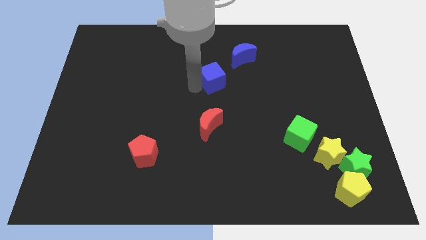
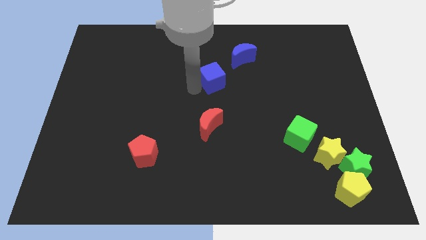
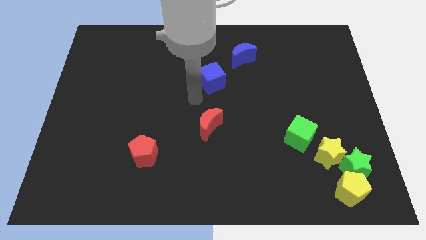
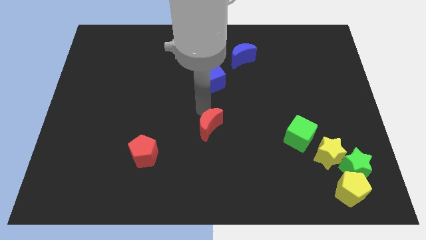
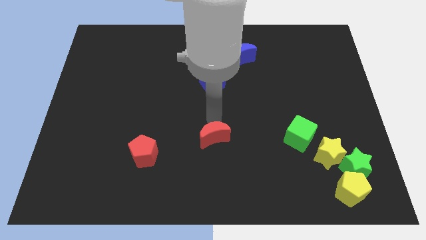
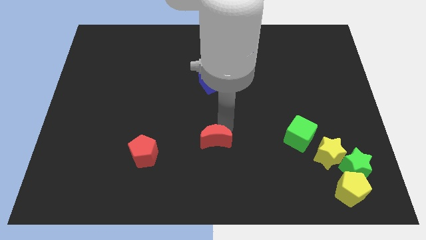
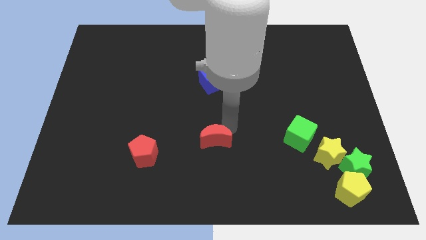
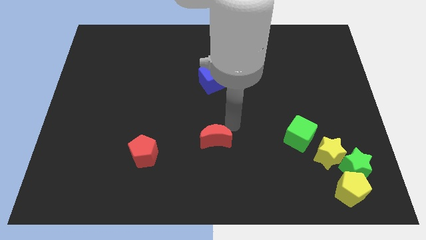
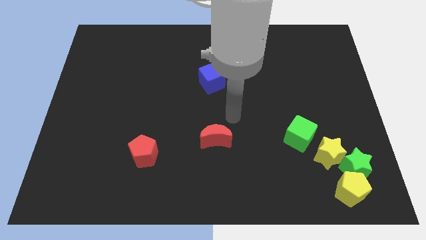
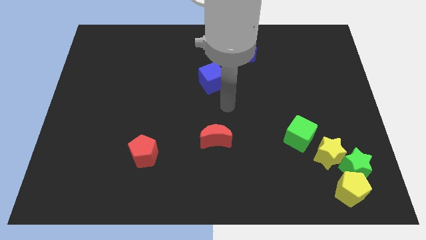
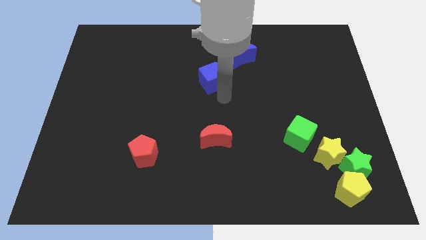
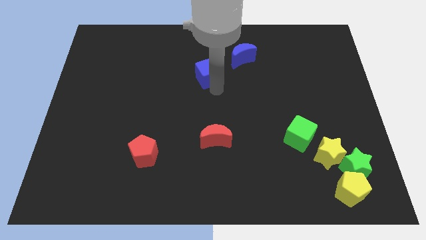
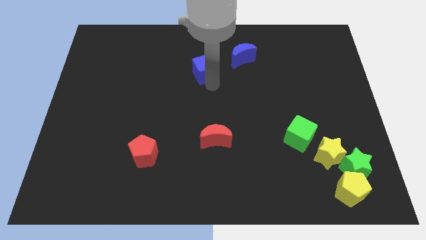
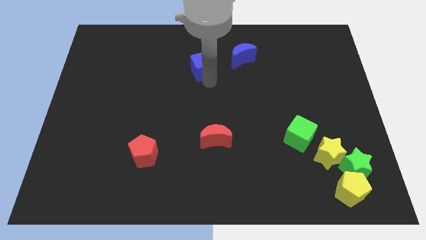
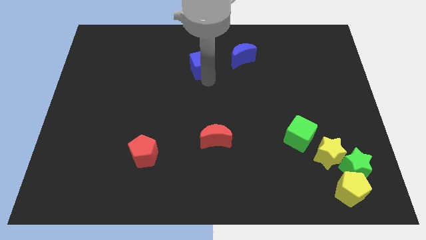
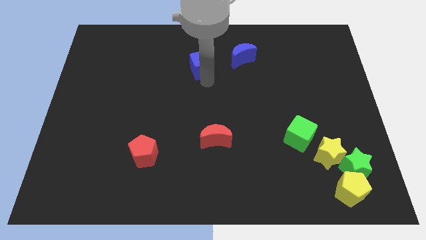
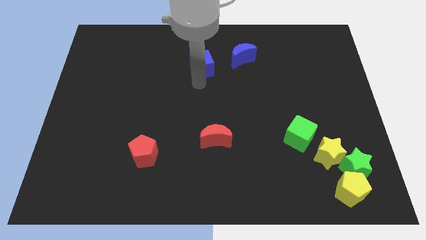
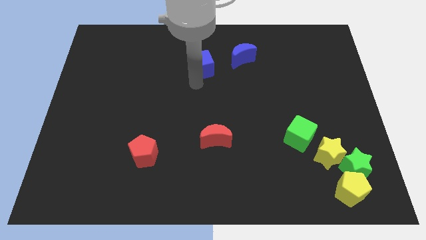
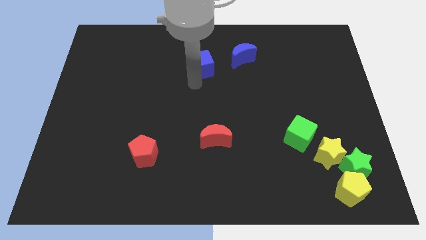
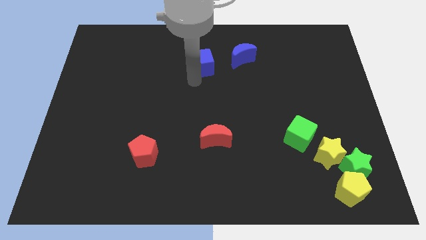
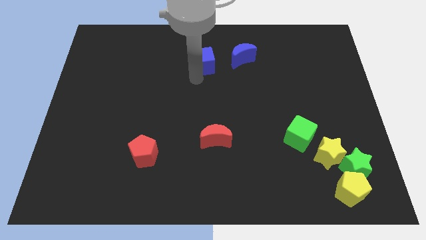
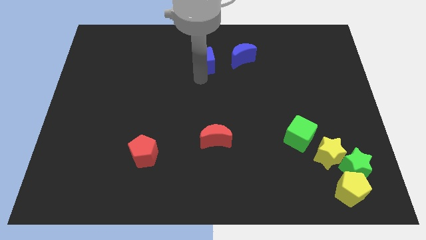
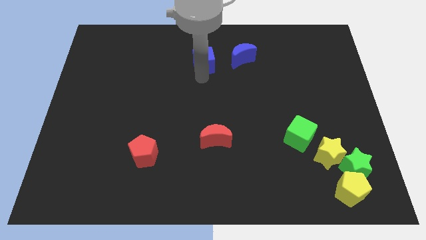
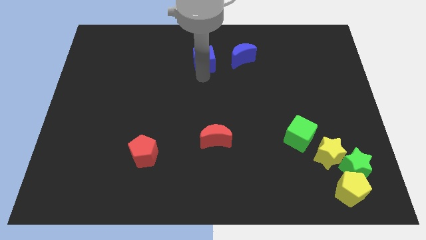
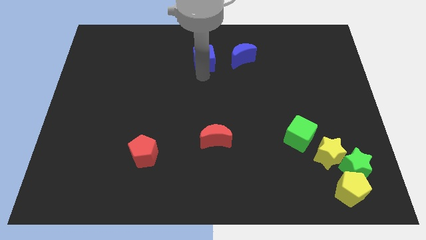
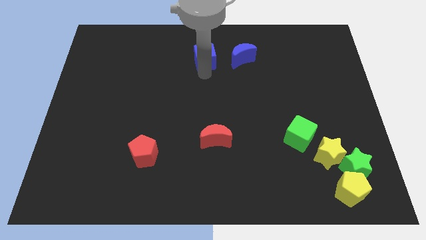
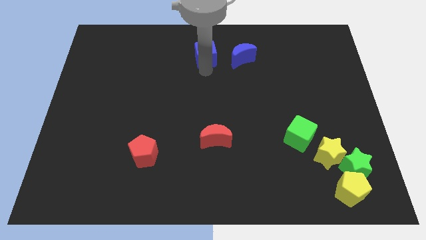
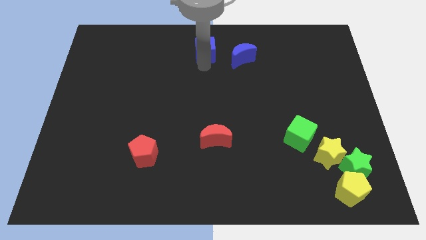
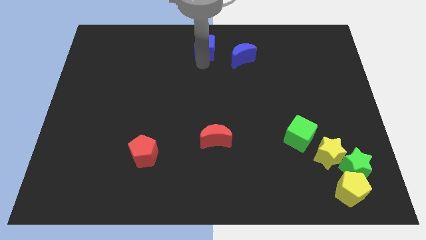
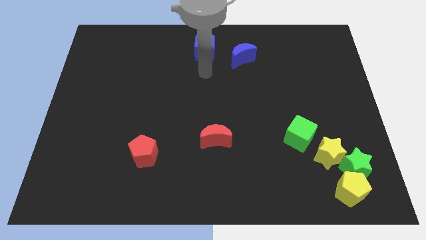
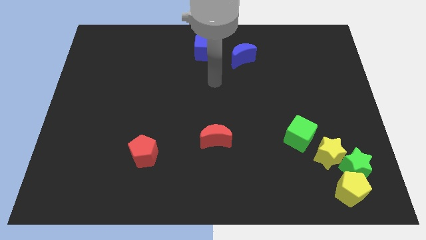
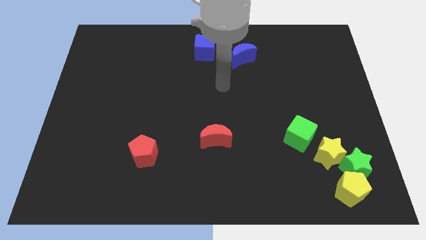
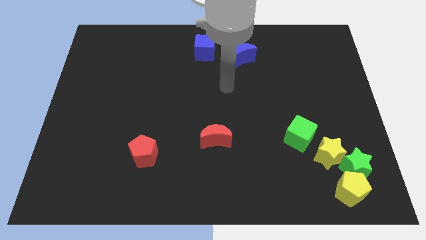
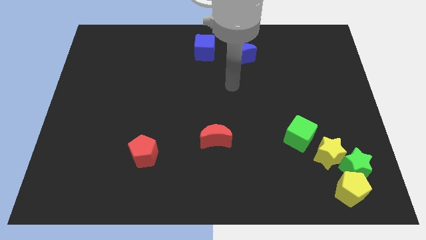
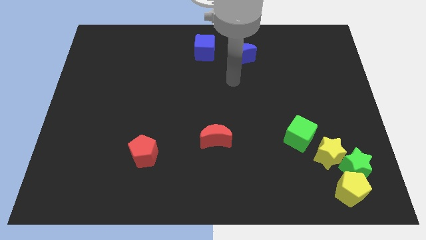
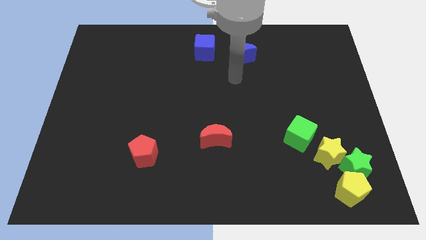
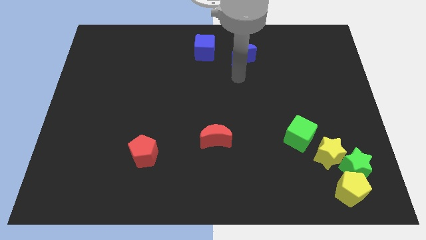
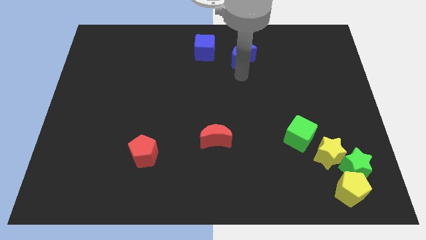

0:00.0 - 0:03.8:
push the blue cube slightly towards top

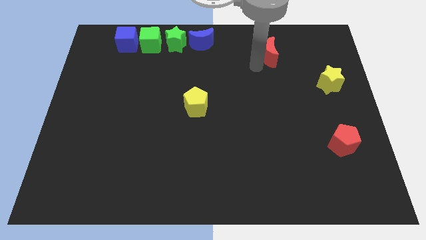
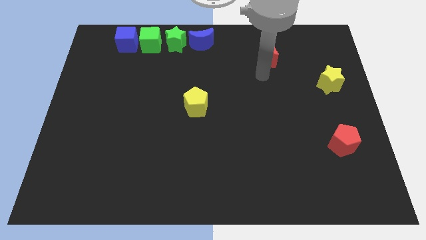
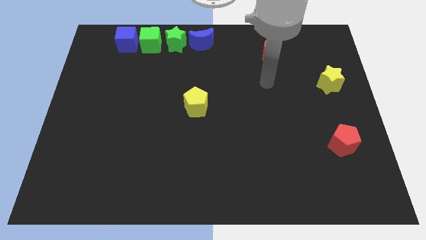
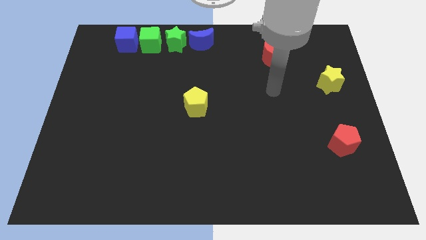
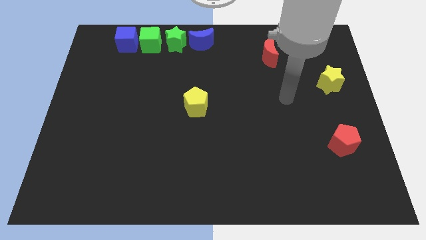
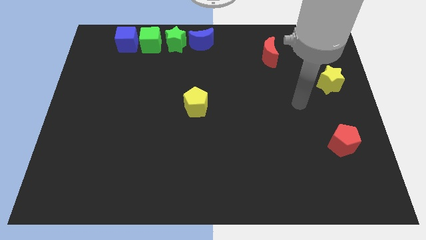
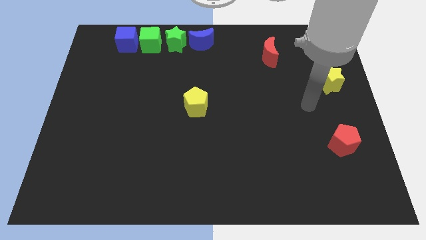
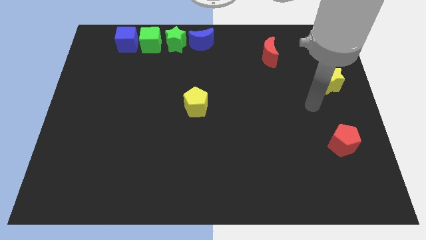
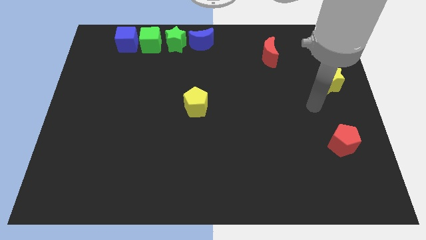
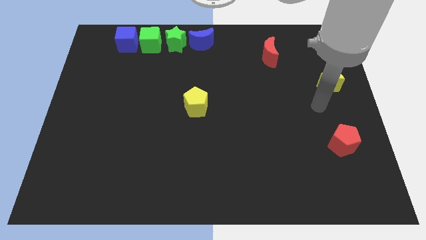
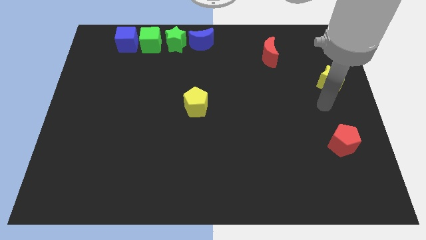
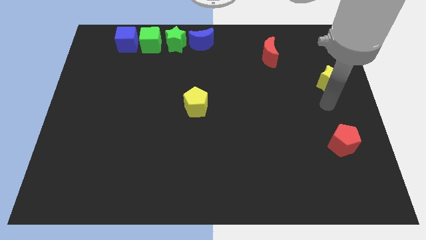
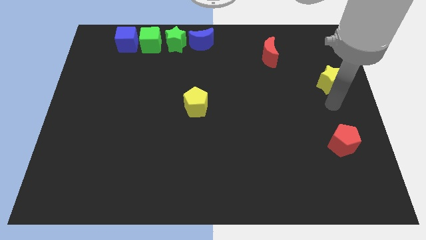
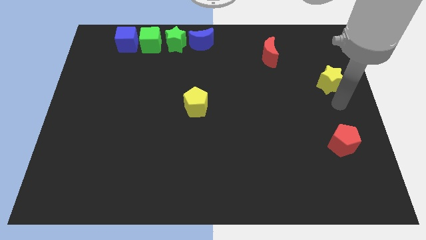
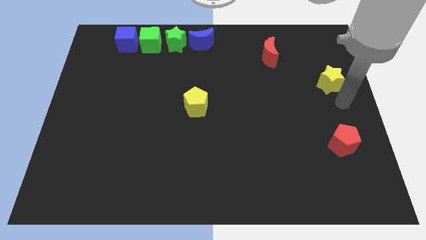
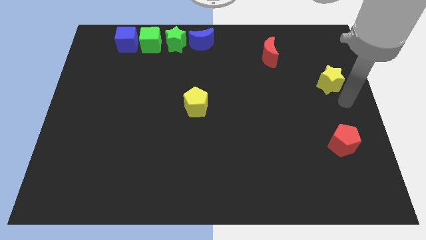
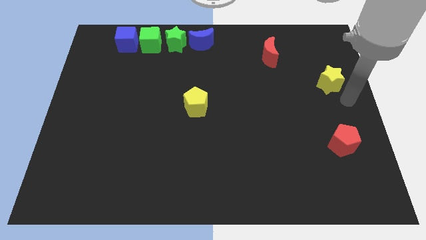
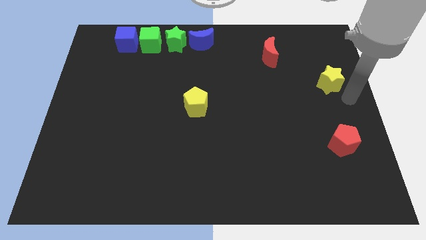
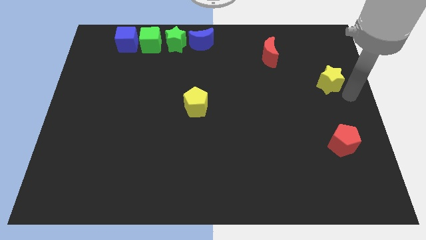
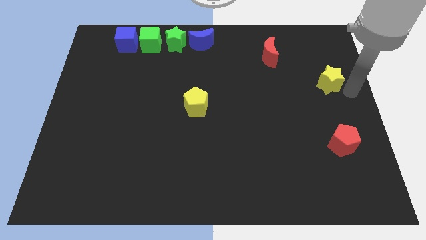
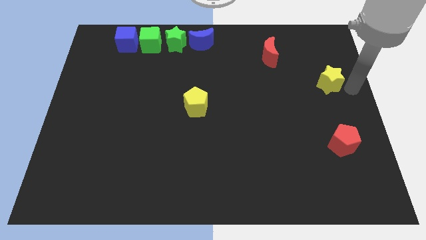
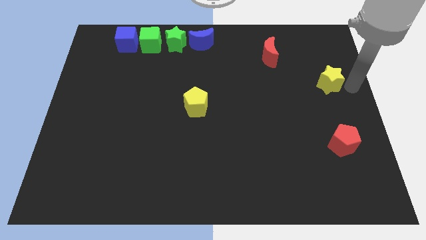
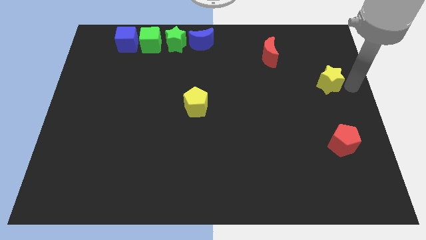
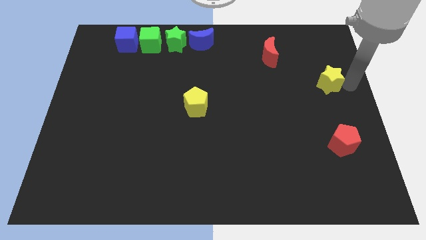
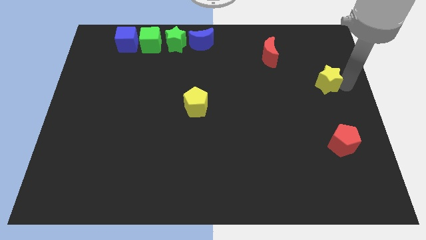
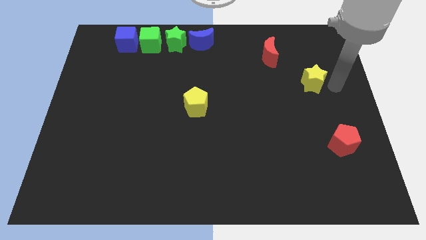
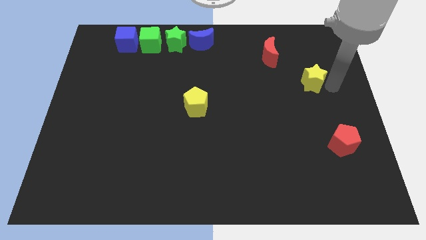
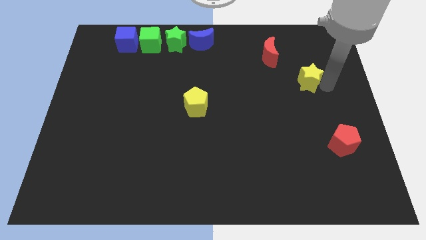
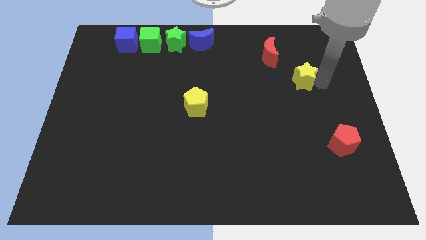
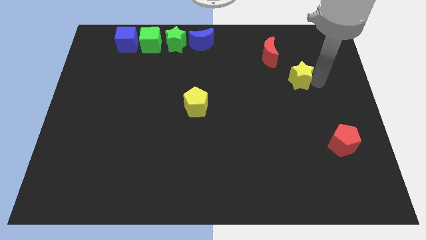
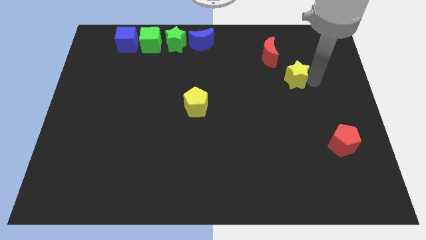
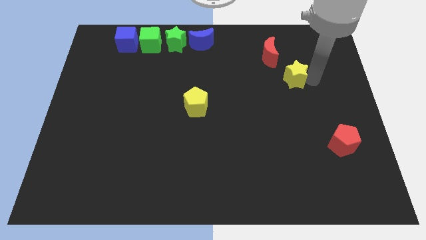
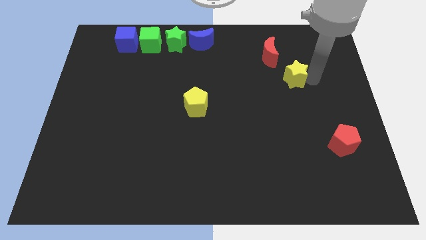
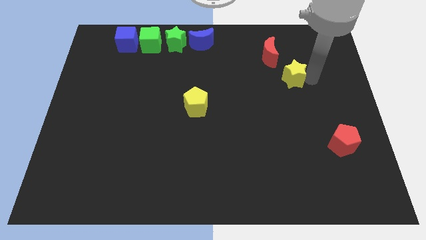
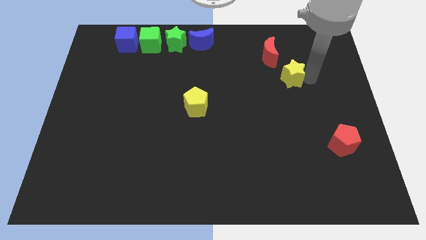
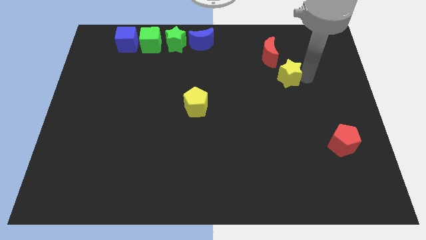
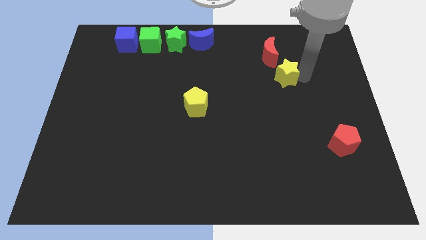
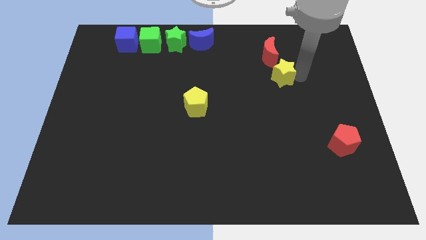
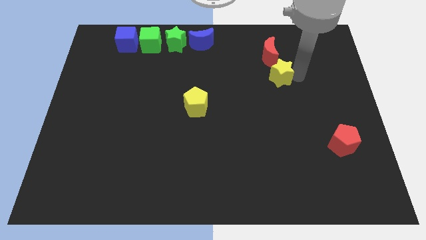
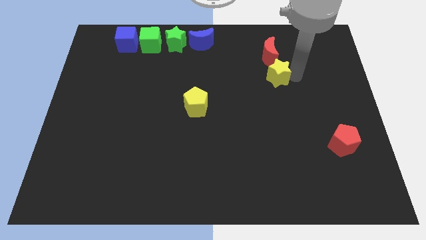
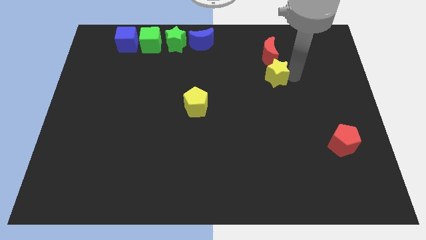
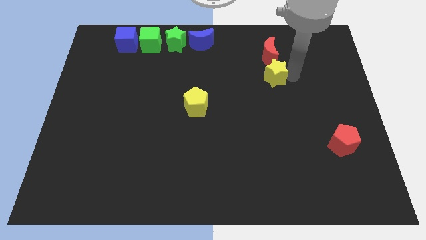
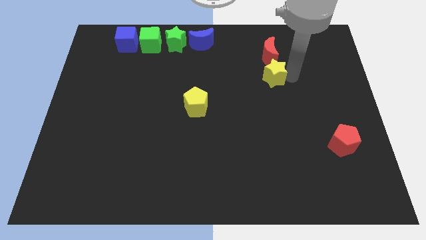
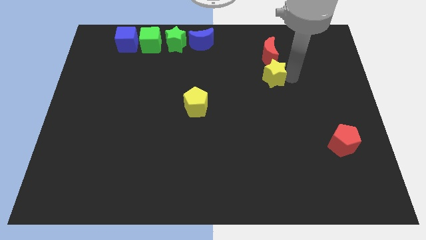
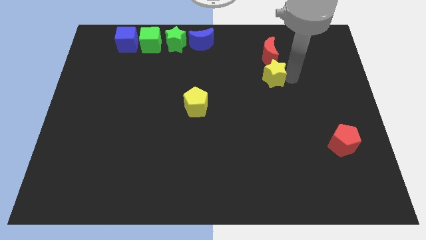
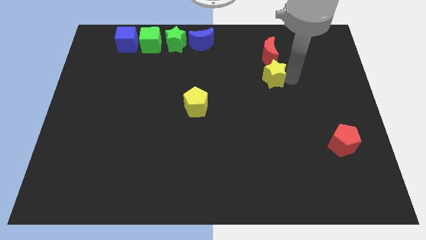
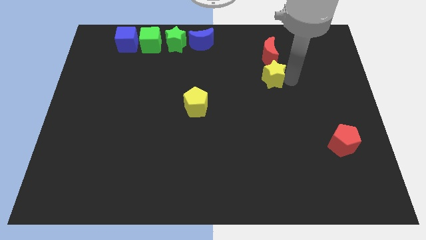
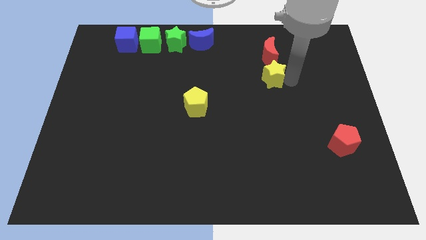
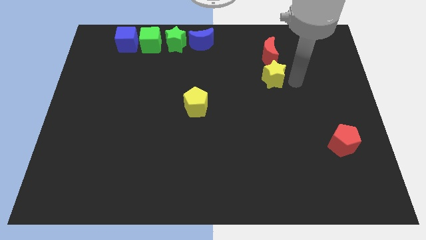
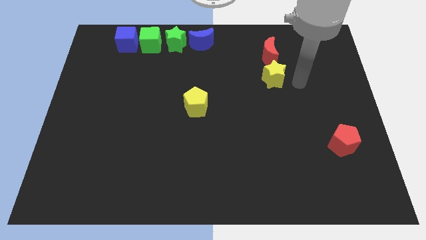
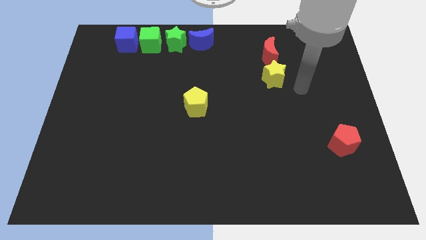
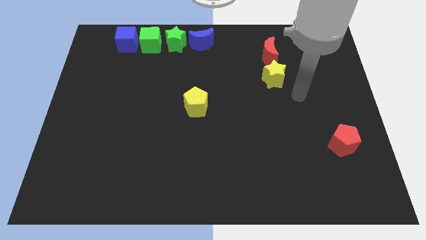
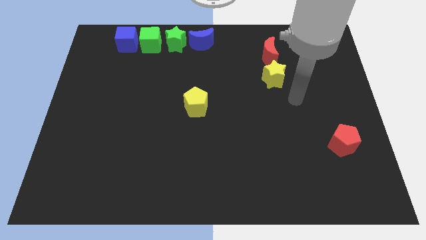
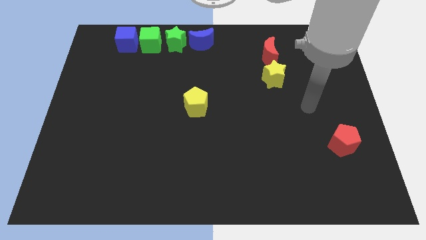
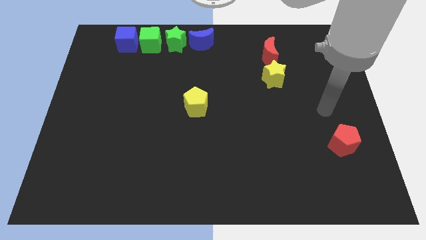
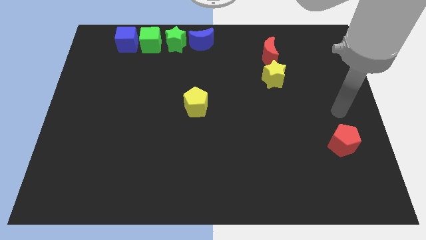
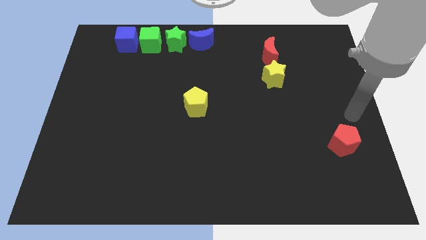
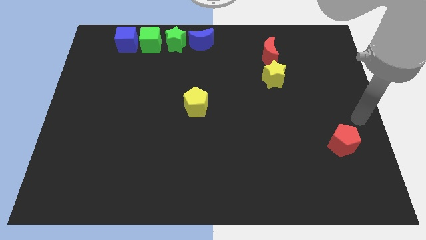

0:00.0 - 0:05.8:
place the yellow star below the red crescent
